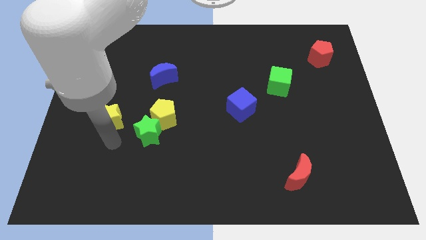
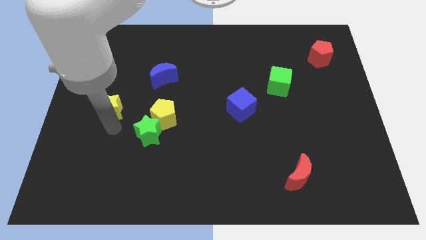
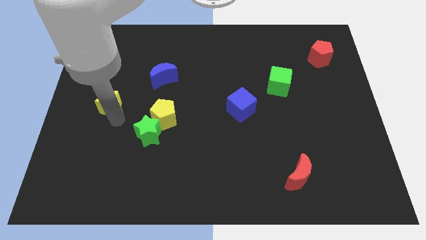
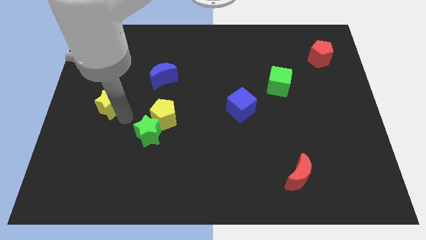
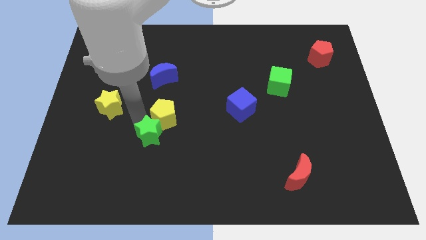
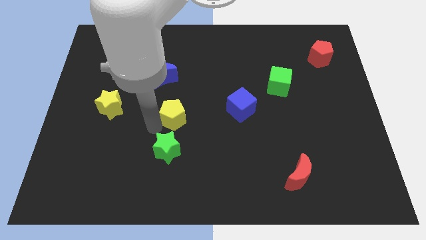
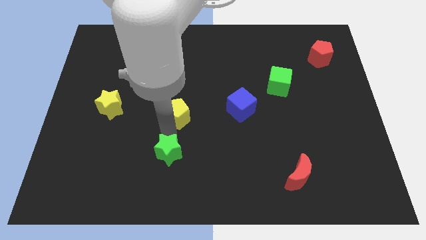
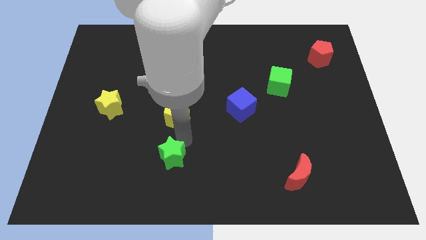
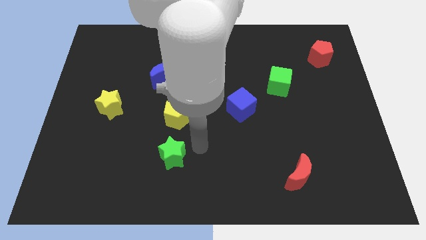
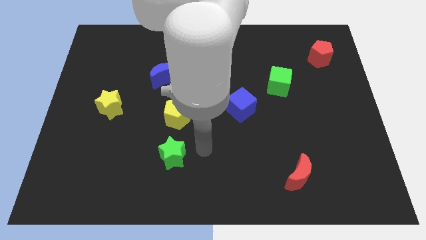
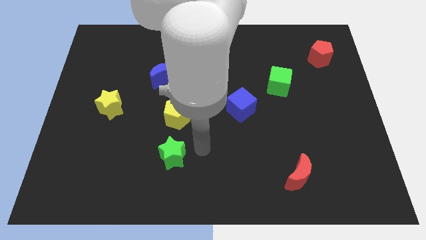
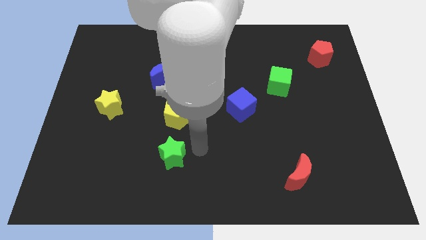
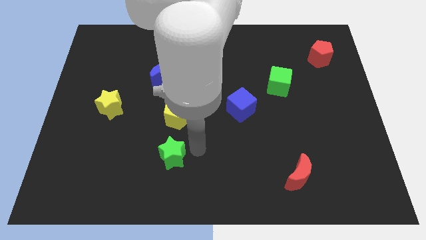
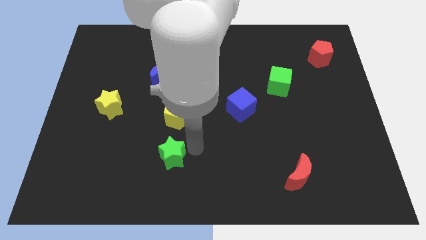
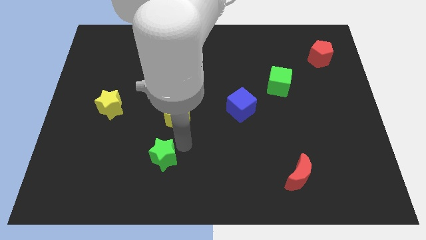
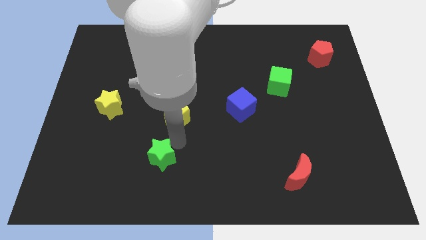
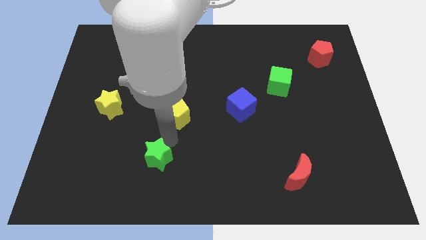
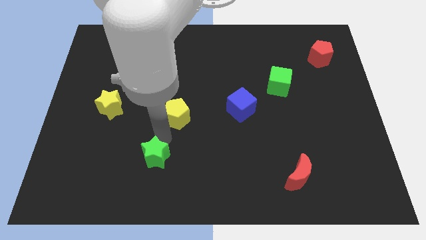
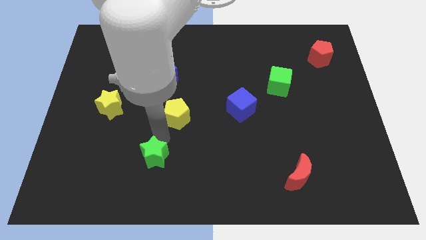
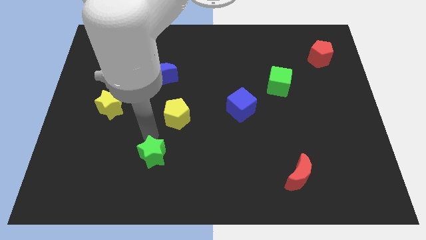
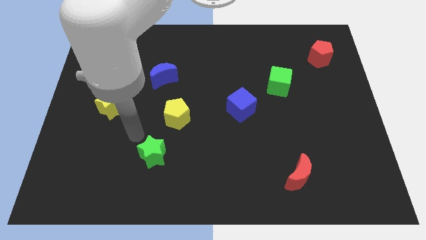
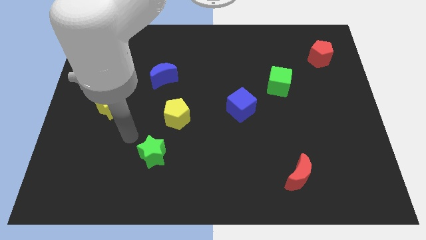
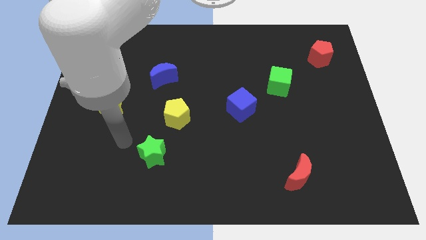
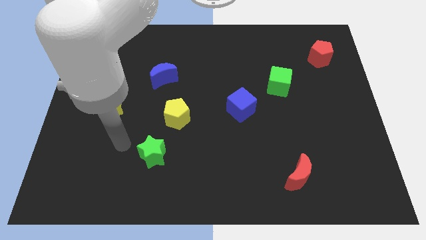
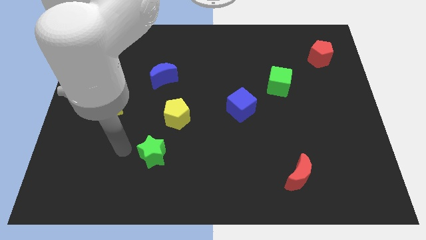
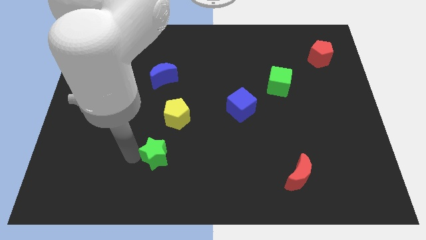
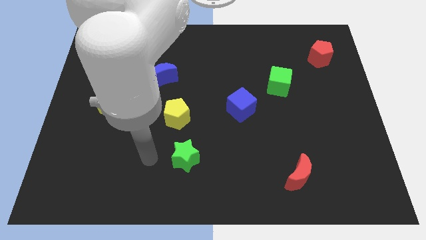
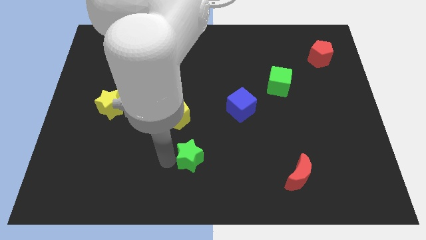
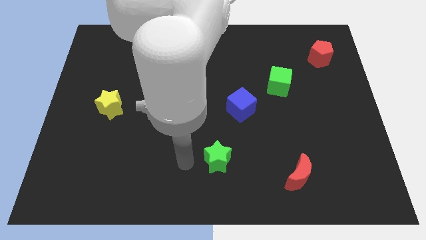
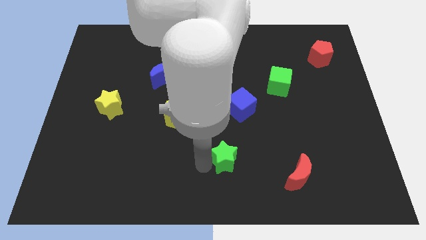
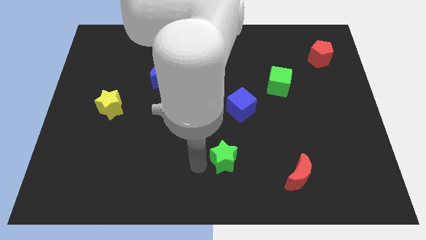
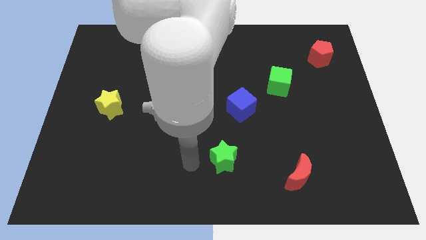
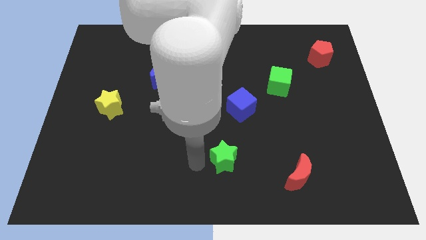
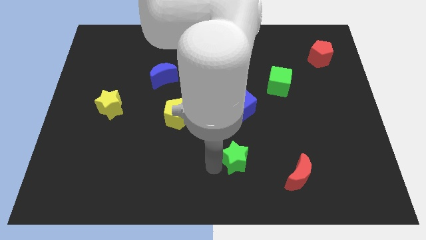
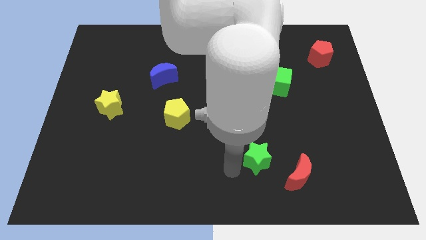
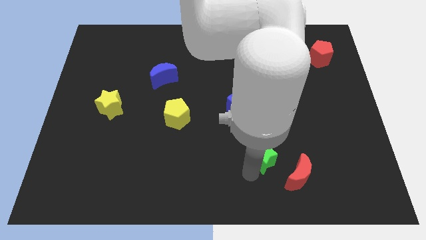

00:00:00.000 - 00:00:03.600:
place the green star in between the yellow pentagon and red moon

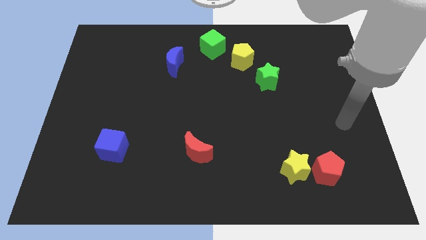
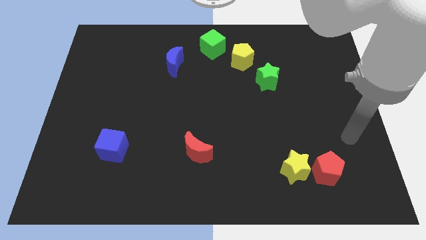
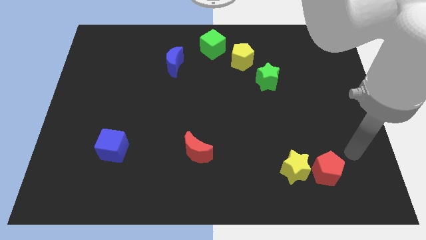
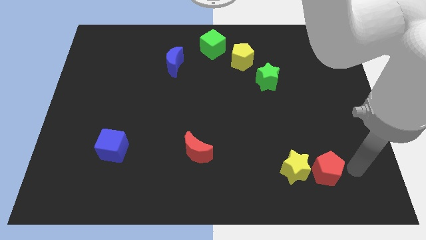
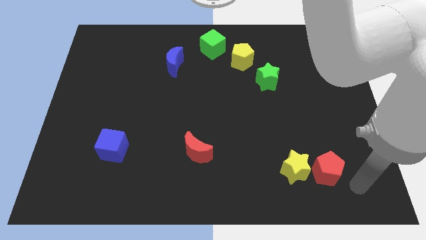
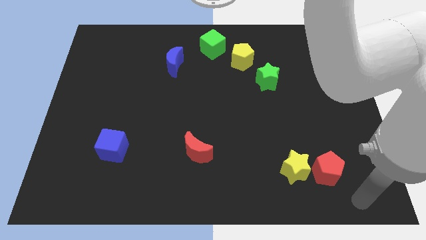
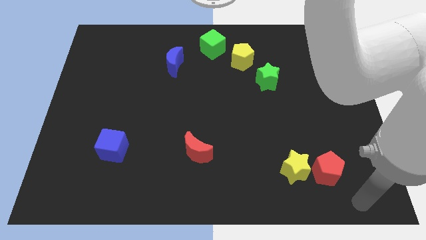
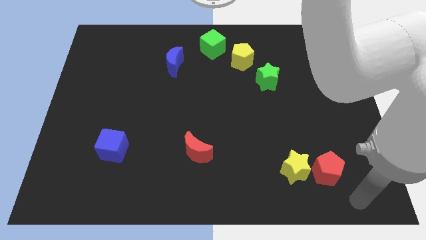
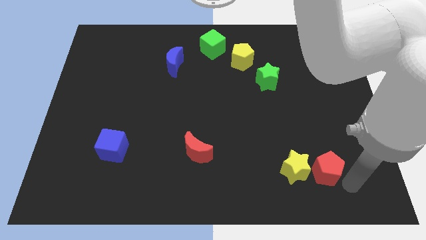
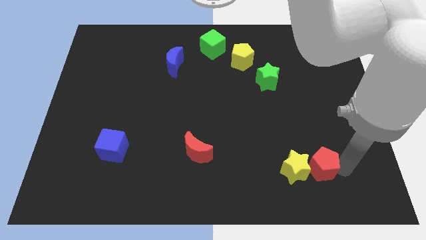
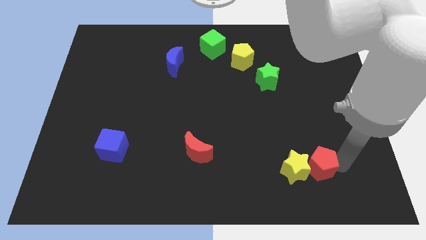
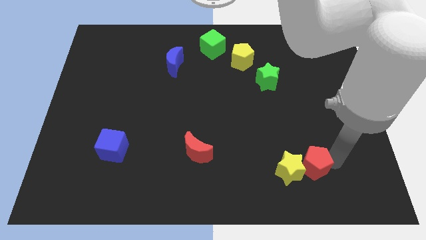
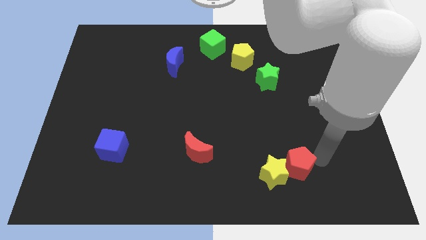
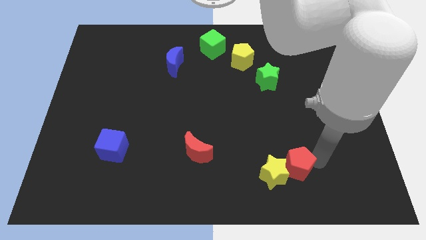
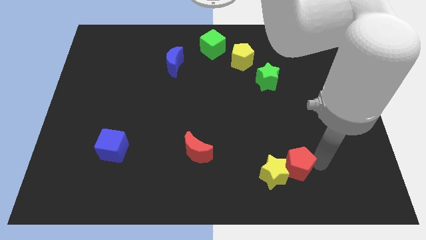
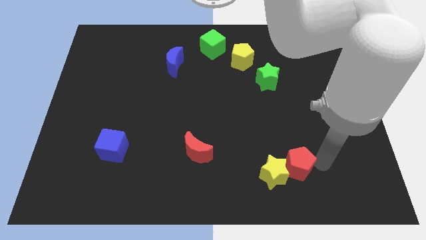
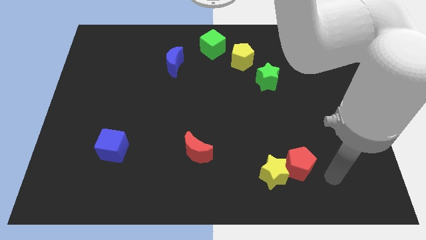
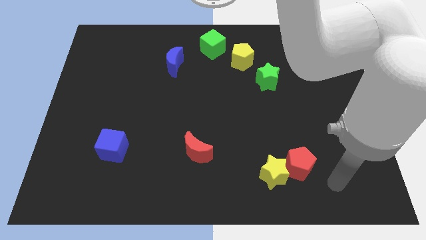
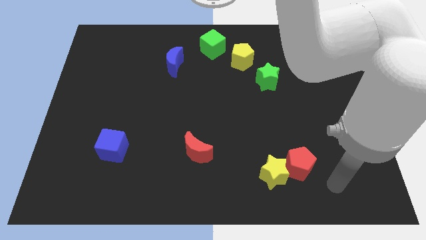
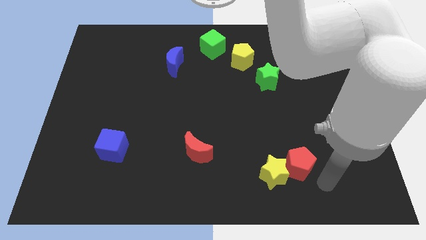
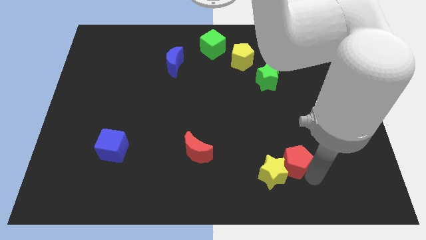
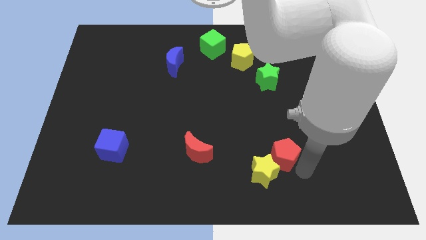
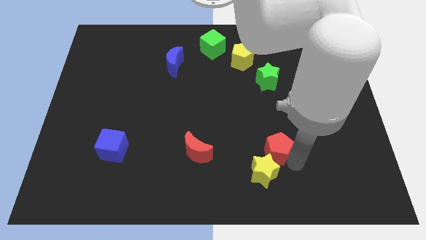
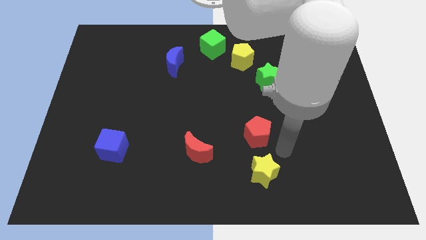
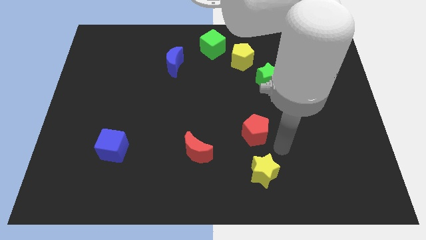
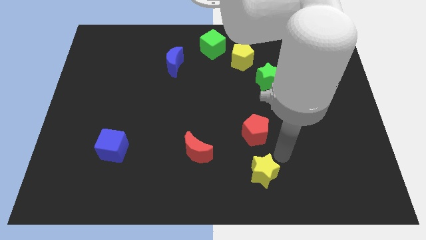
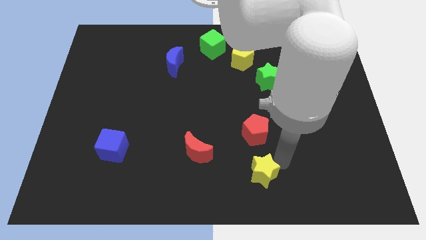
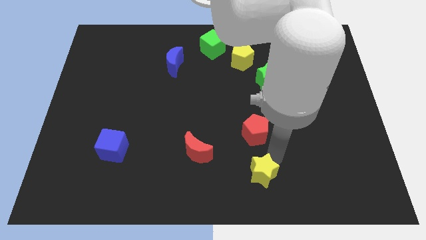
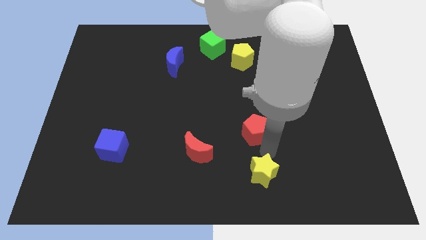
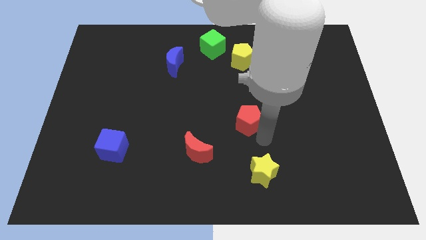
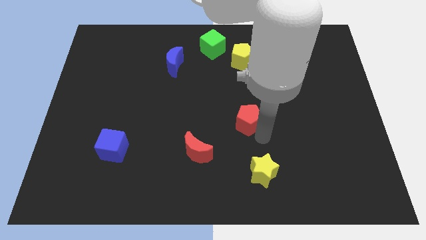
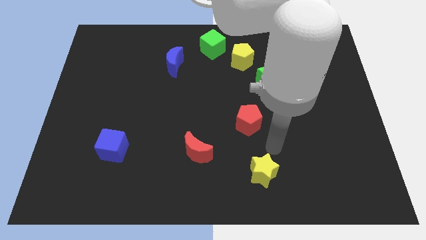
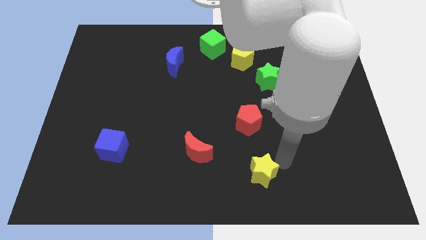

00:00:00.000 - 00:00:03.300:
move the red pentagon towards the center

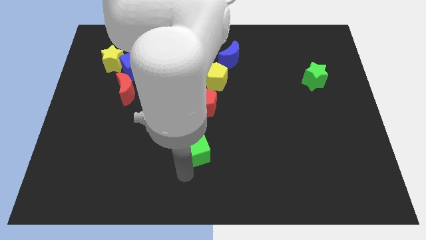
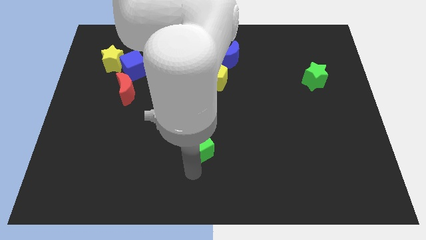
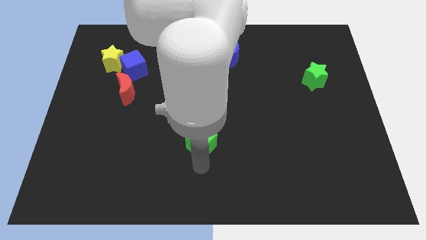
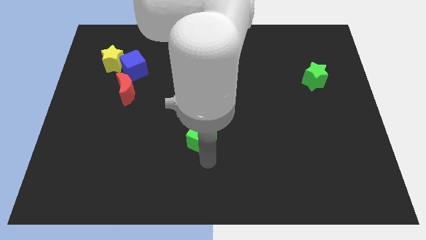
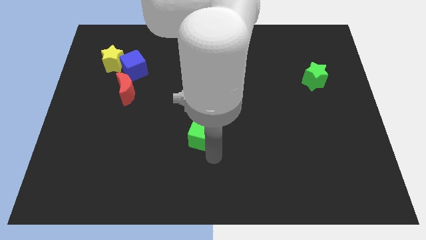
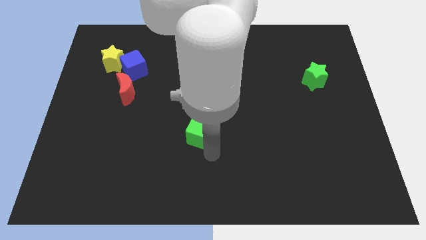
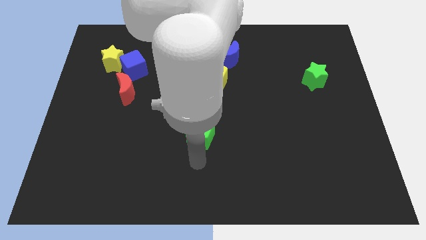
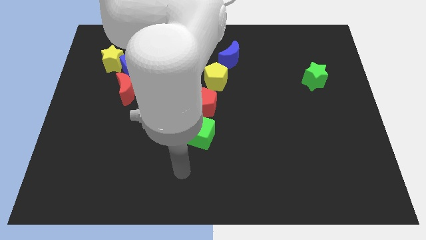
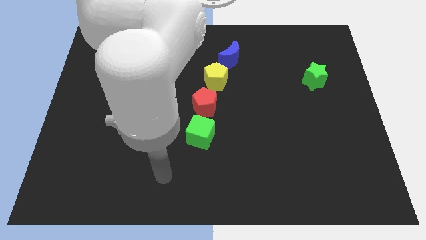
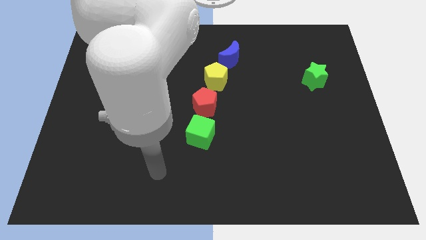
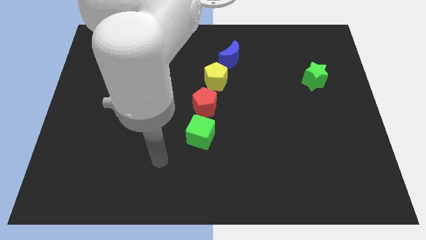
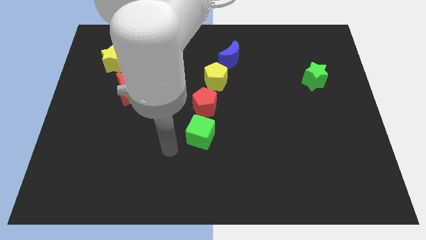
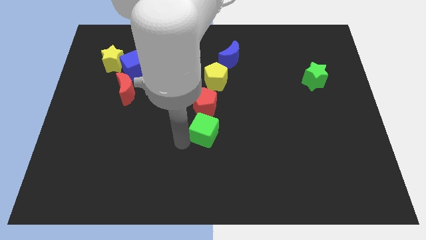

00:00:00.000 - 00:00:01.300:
push the green cube to the bottom of the red pentagon

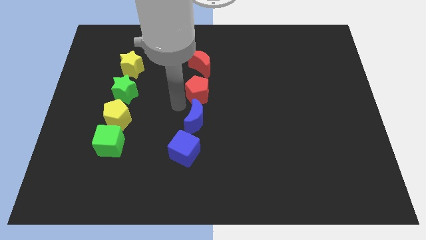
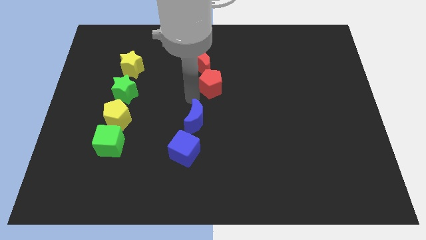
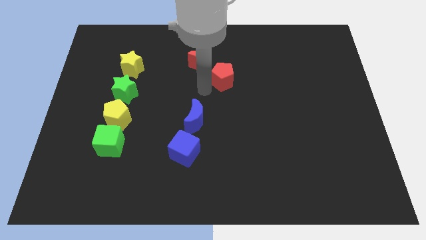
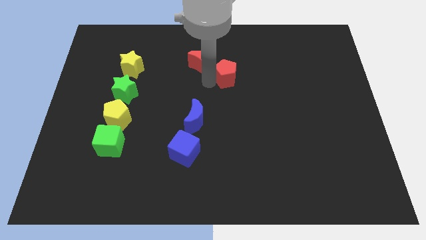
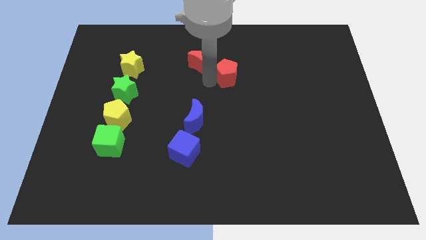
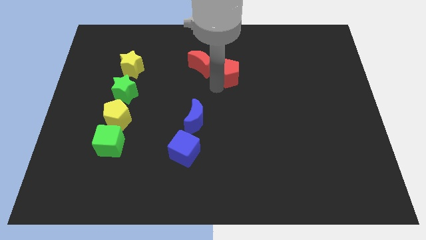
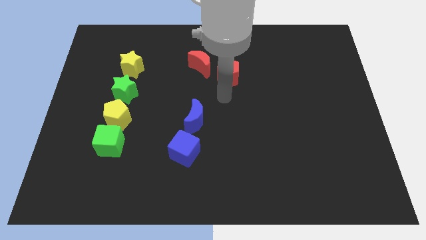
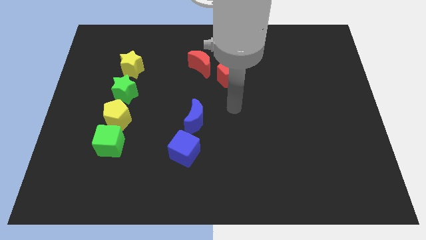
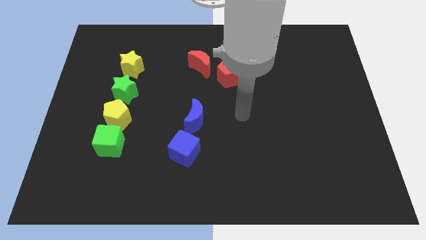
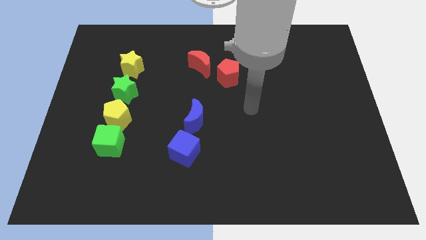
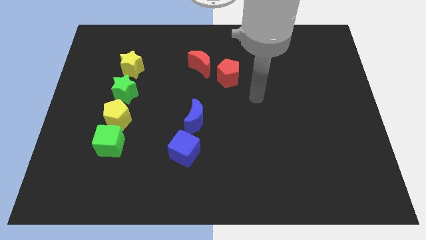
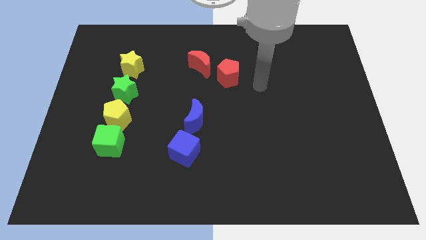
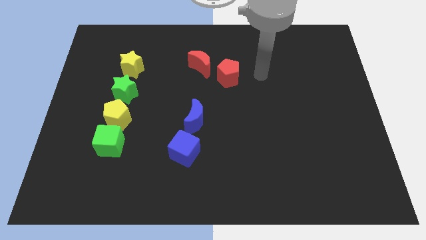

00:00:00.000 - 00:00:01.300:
place the red pentagon to the right of the red crescent
